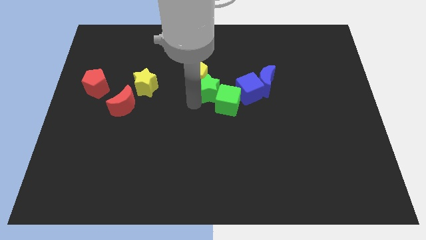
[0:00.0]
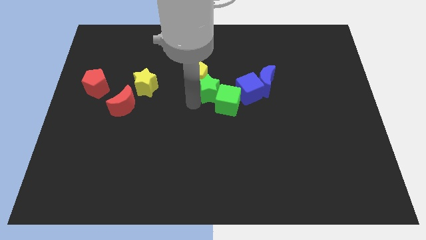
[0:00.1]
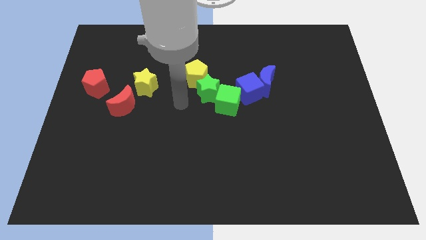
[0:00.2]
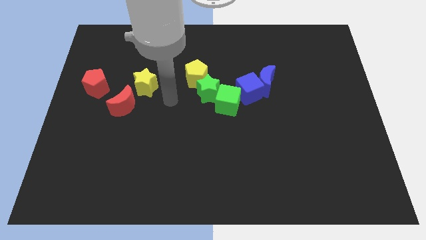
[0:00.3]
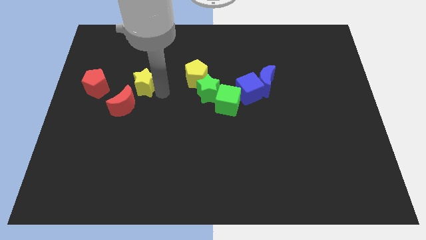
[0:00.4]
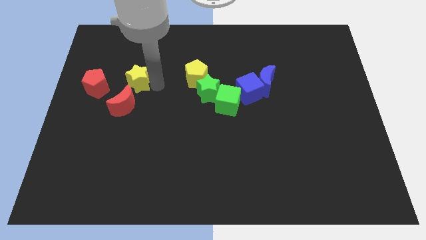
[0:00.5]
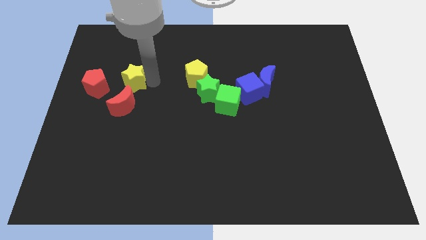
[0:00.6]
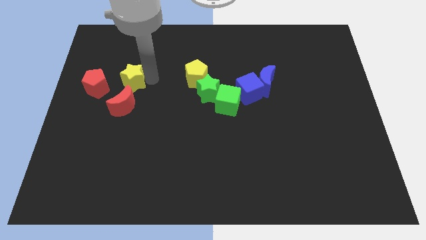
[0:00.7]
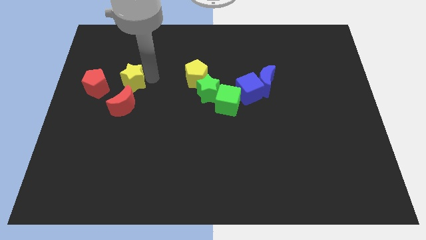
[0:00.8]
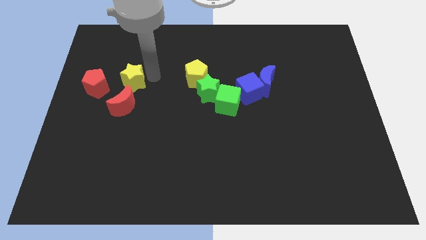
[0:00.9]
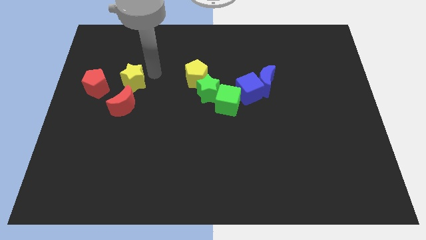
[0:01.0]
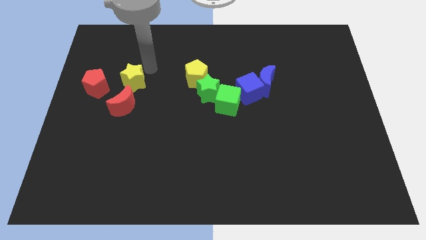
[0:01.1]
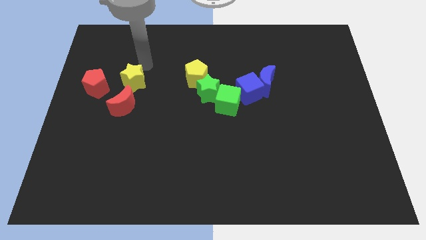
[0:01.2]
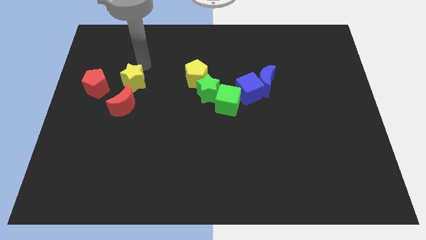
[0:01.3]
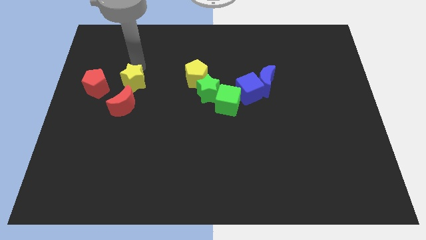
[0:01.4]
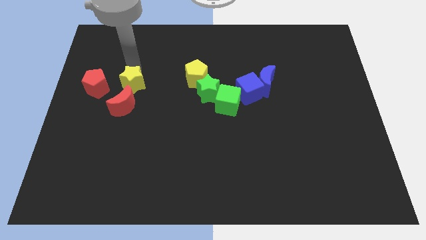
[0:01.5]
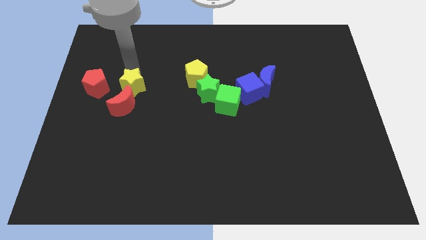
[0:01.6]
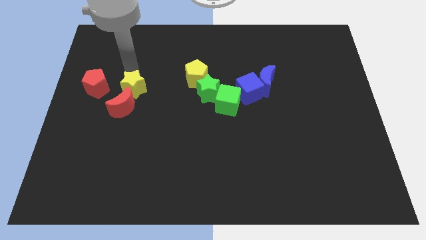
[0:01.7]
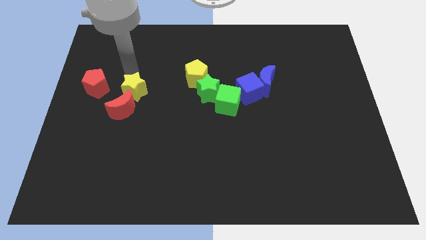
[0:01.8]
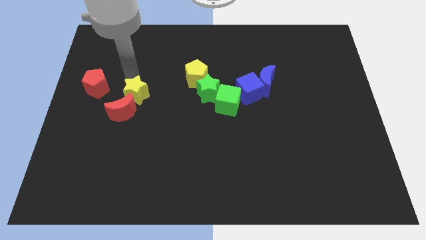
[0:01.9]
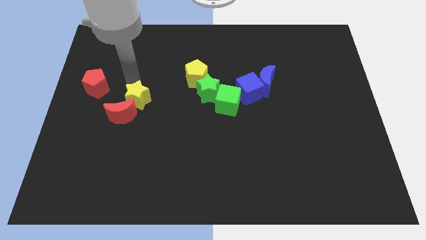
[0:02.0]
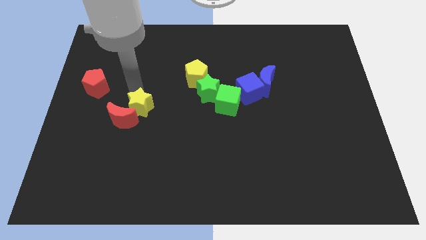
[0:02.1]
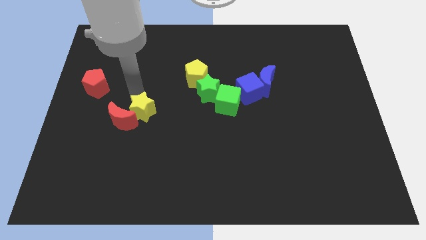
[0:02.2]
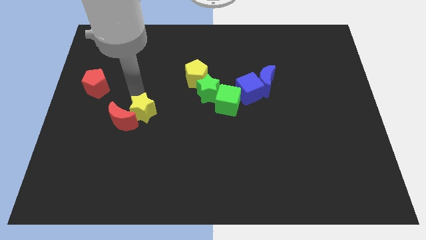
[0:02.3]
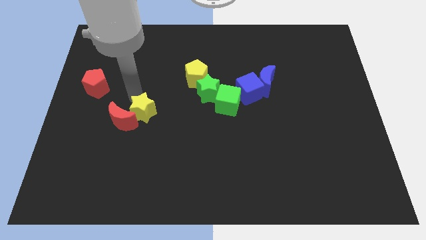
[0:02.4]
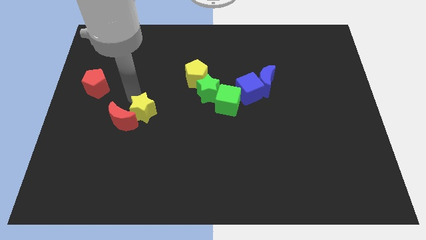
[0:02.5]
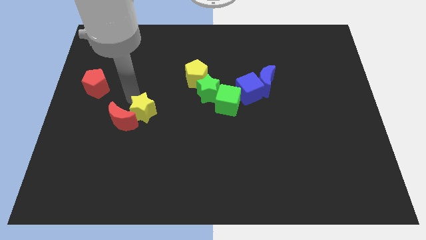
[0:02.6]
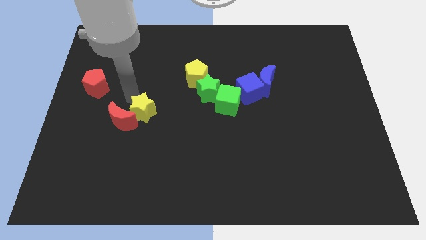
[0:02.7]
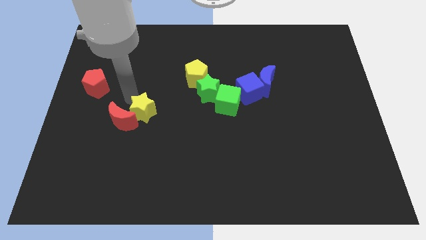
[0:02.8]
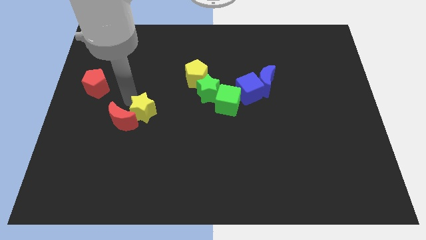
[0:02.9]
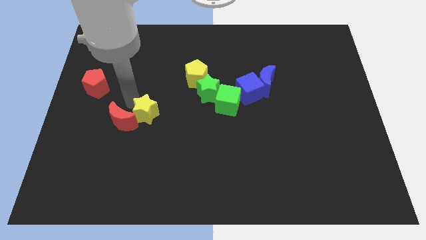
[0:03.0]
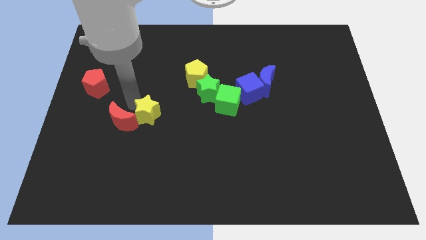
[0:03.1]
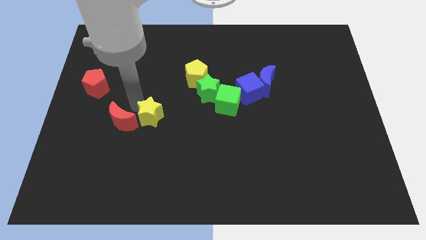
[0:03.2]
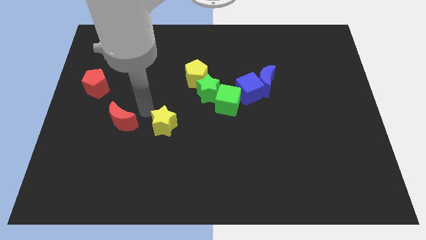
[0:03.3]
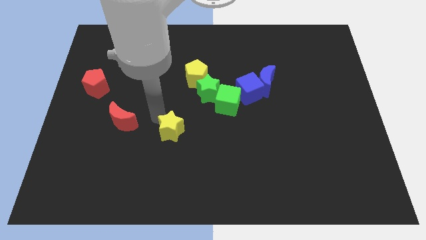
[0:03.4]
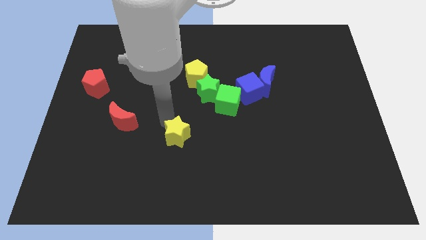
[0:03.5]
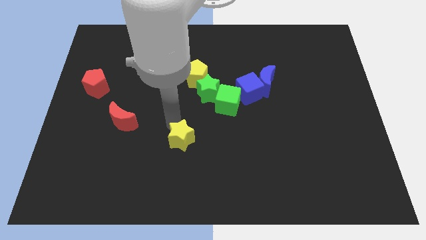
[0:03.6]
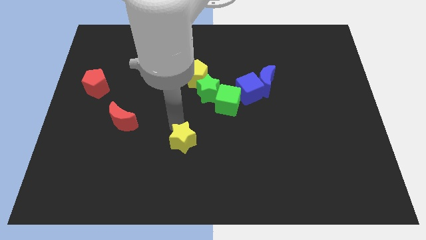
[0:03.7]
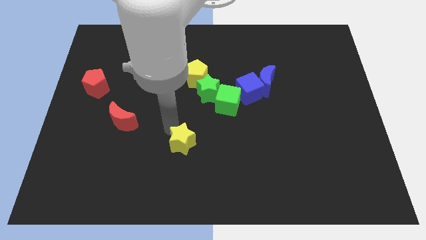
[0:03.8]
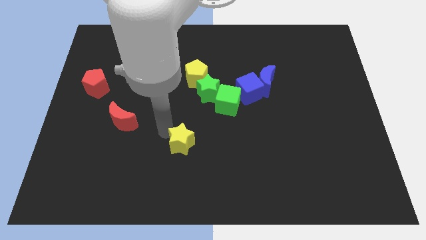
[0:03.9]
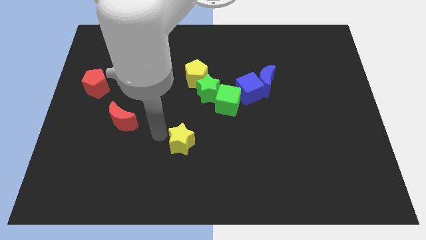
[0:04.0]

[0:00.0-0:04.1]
place yellow star to the bottom right of red moon

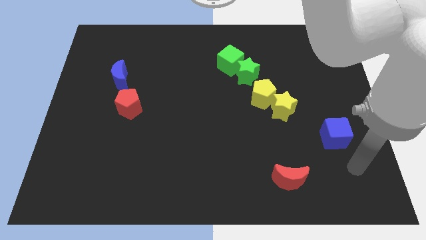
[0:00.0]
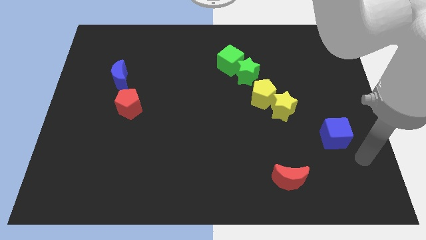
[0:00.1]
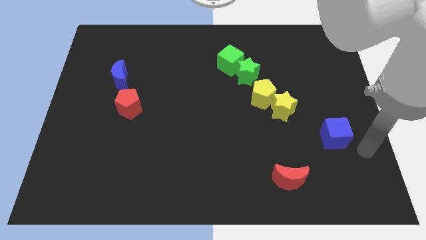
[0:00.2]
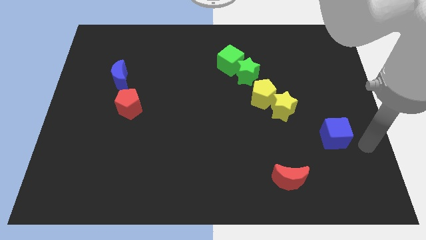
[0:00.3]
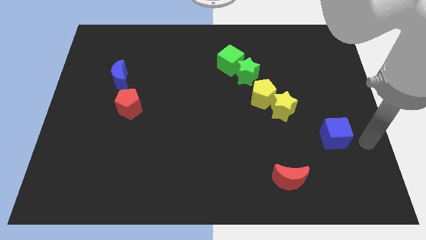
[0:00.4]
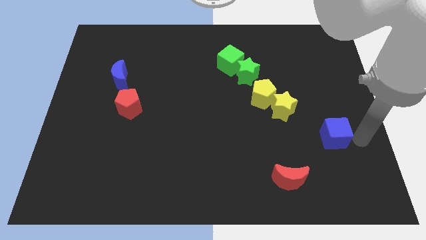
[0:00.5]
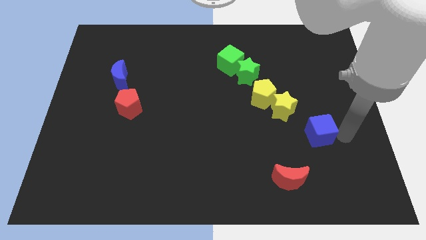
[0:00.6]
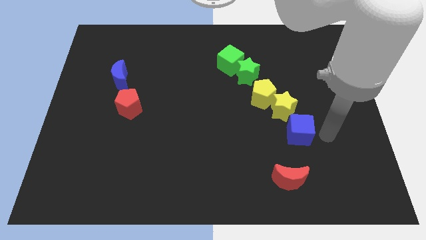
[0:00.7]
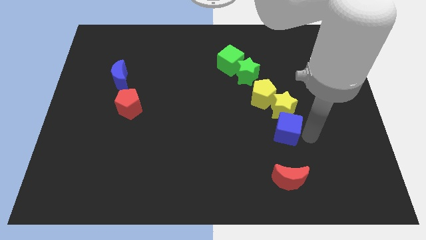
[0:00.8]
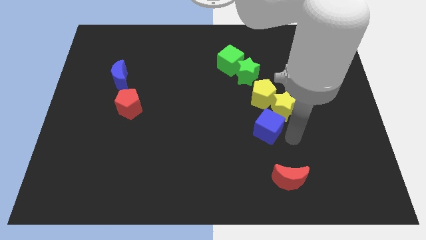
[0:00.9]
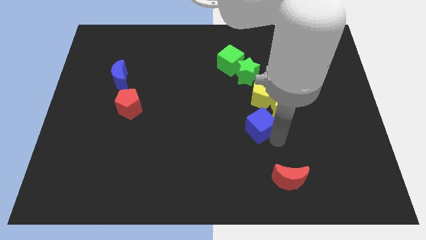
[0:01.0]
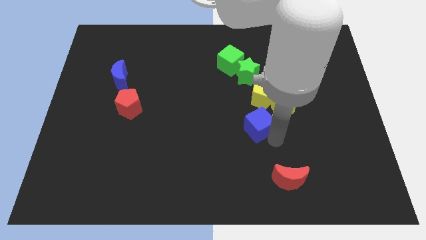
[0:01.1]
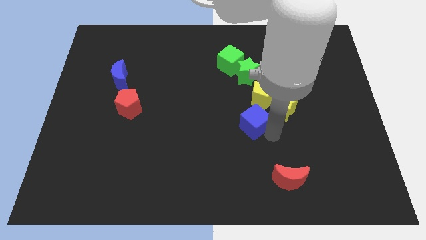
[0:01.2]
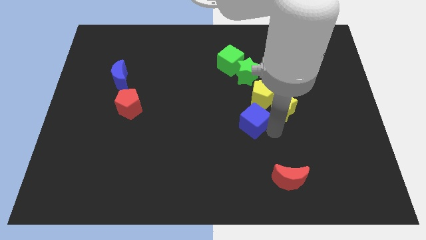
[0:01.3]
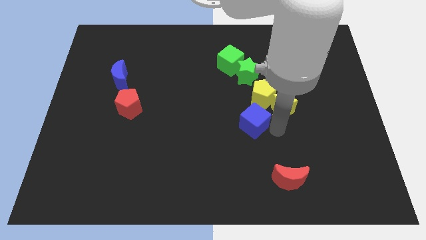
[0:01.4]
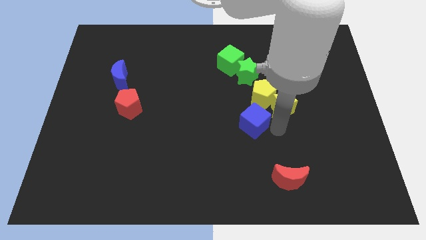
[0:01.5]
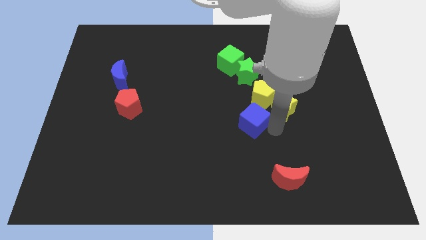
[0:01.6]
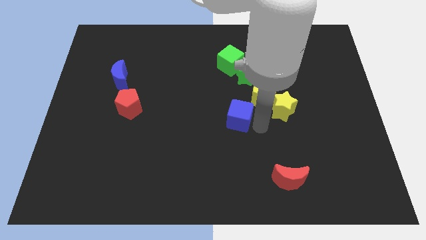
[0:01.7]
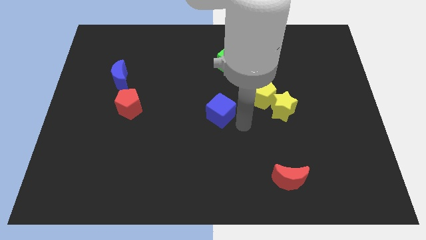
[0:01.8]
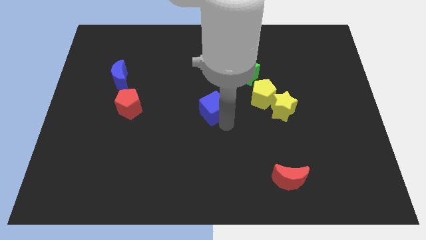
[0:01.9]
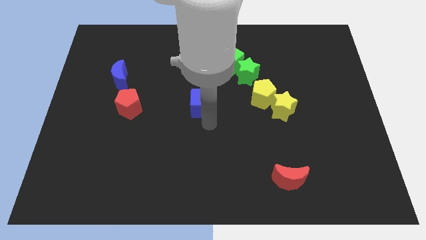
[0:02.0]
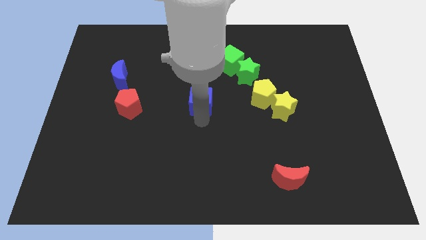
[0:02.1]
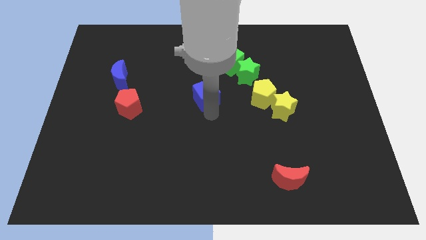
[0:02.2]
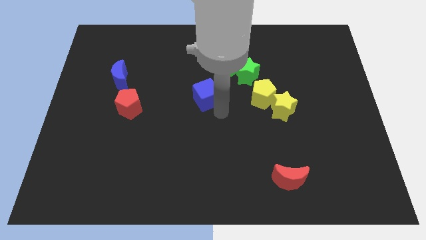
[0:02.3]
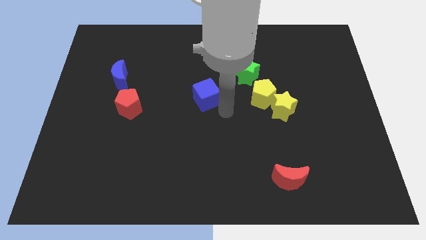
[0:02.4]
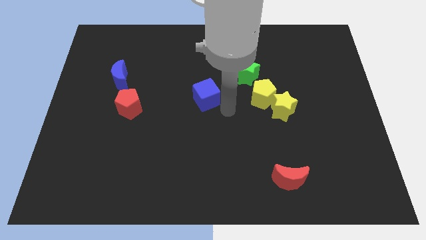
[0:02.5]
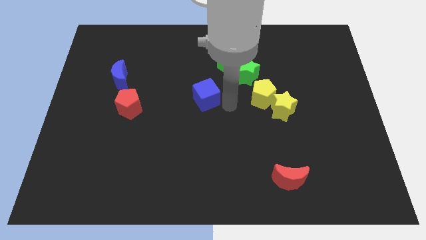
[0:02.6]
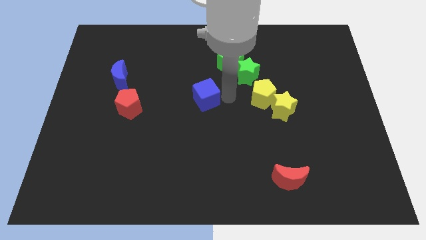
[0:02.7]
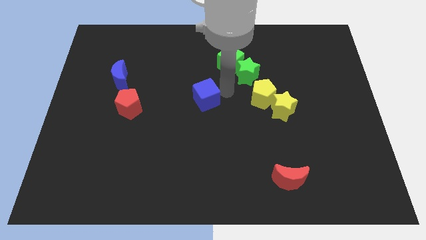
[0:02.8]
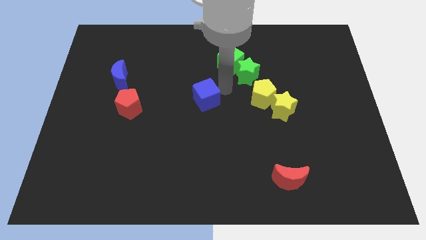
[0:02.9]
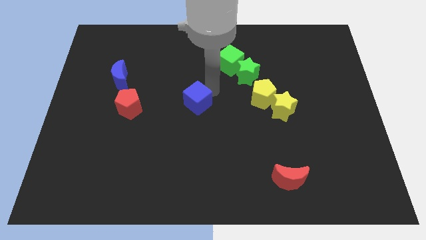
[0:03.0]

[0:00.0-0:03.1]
move the blue cube to the right of red pentagon

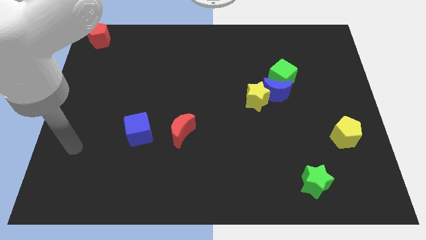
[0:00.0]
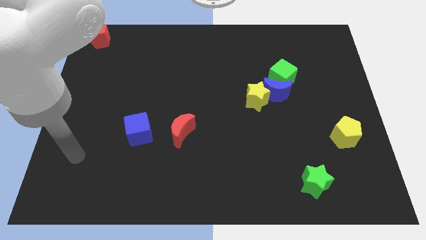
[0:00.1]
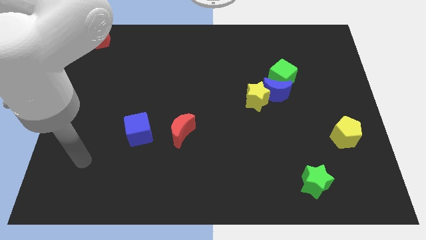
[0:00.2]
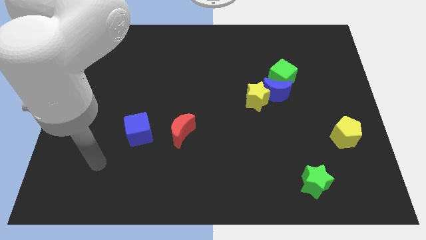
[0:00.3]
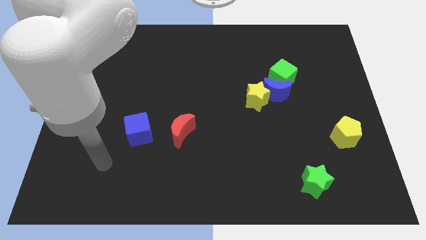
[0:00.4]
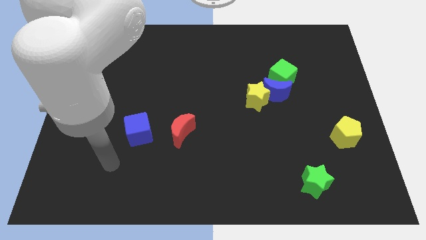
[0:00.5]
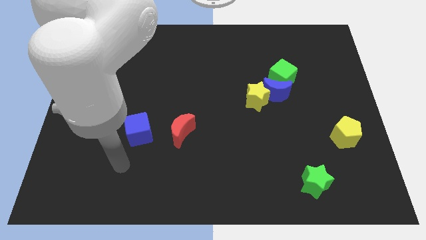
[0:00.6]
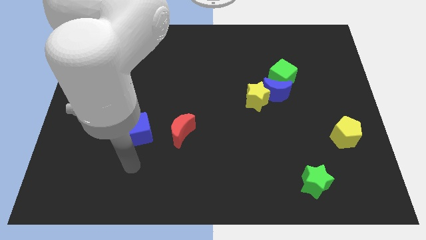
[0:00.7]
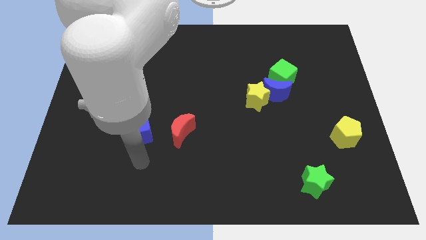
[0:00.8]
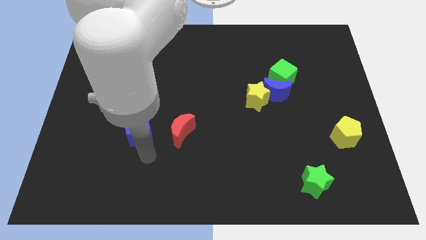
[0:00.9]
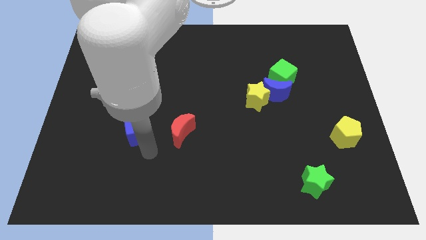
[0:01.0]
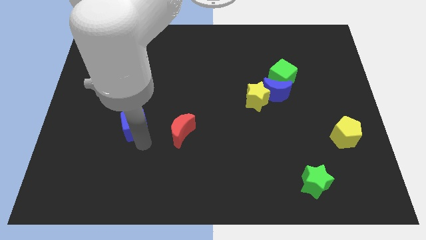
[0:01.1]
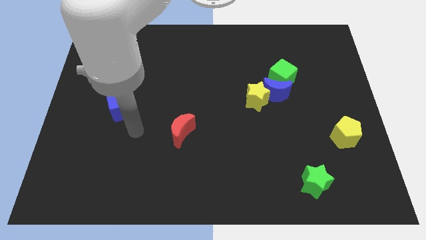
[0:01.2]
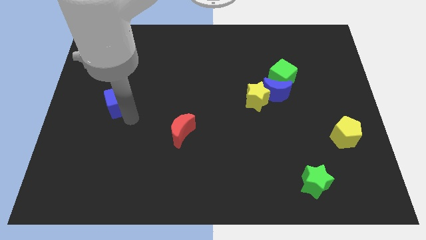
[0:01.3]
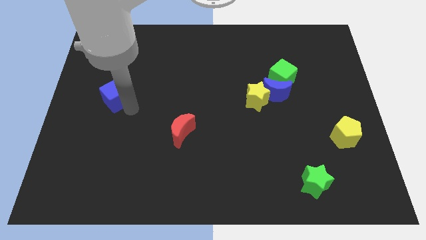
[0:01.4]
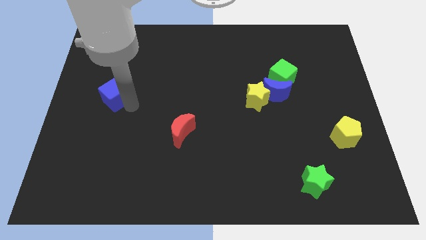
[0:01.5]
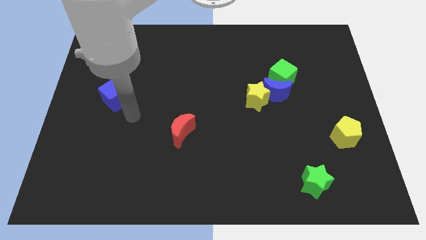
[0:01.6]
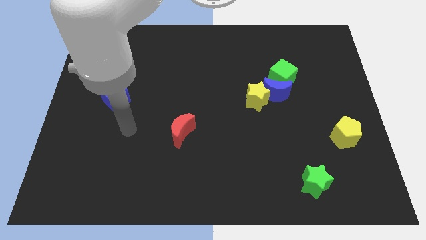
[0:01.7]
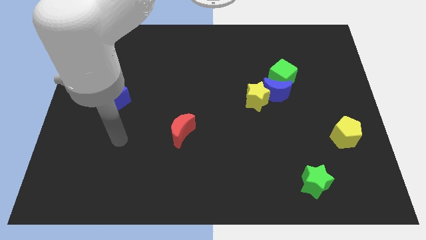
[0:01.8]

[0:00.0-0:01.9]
move the blue cube towards left center of the board
